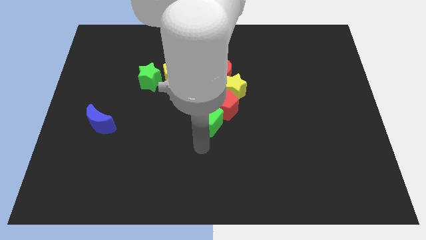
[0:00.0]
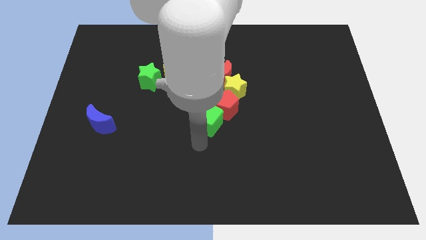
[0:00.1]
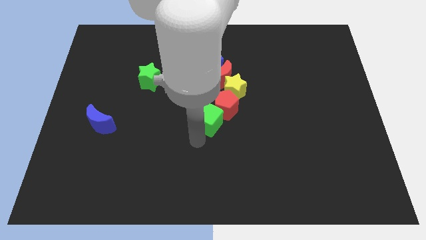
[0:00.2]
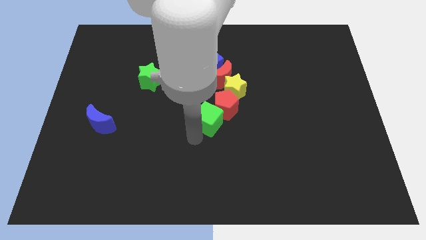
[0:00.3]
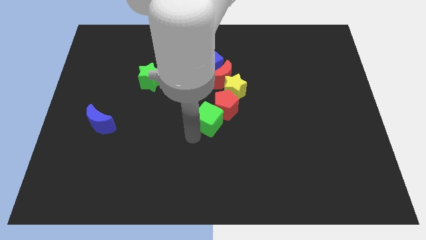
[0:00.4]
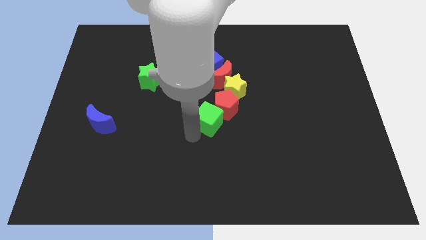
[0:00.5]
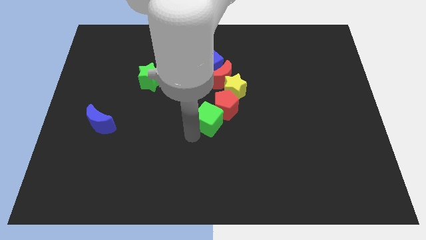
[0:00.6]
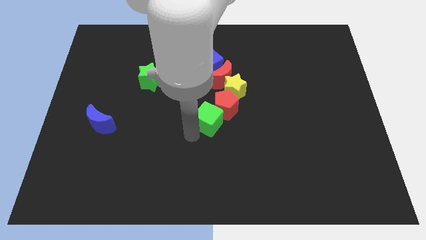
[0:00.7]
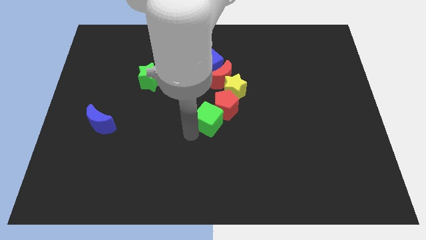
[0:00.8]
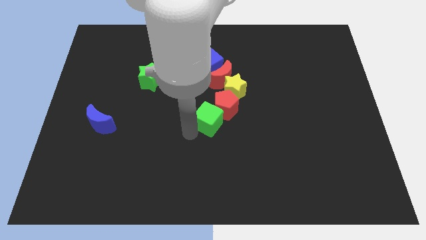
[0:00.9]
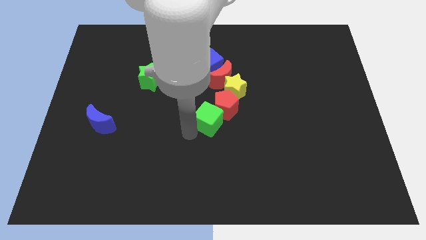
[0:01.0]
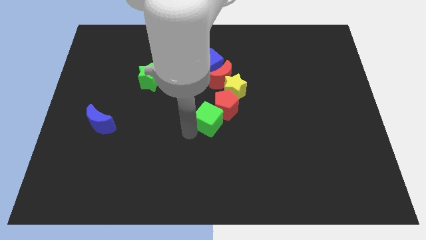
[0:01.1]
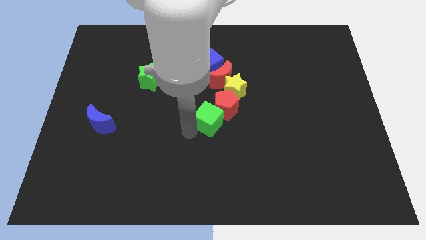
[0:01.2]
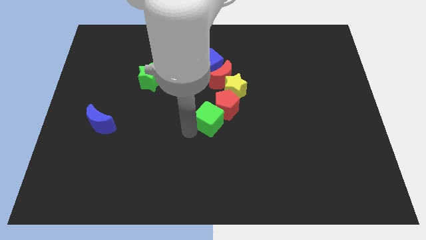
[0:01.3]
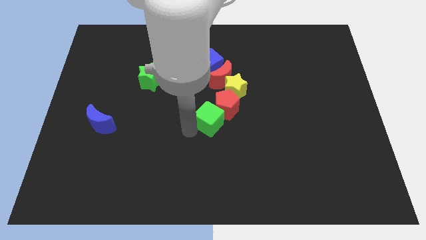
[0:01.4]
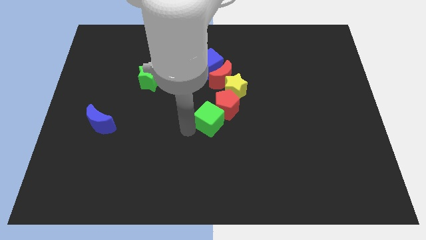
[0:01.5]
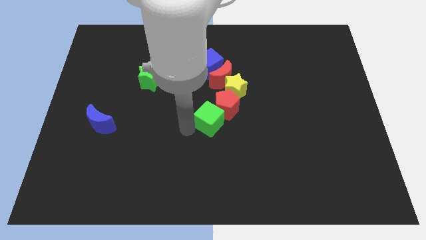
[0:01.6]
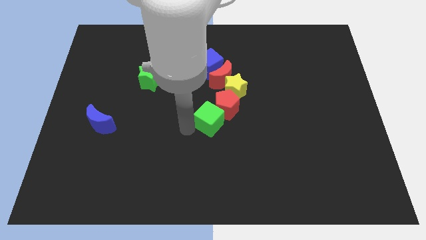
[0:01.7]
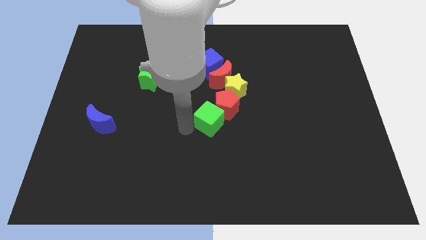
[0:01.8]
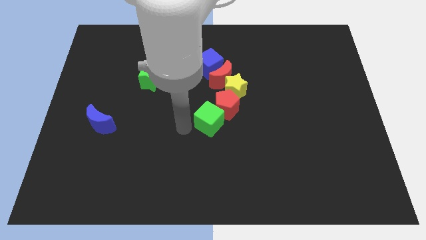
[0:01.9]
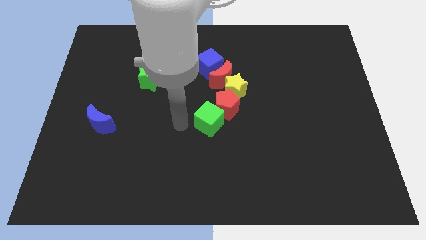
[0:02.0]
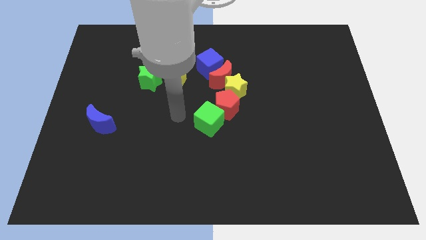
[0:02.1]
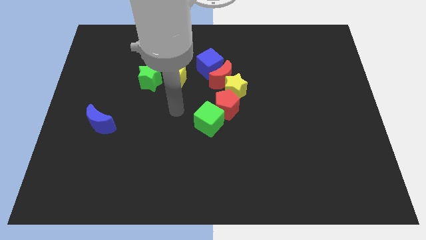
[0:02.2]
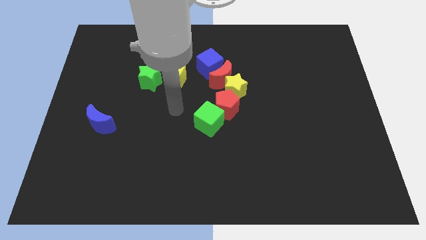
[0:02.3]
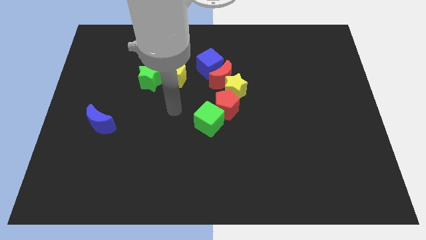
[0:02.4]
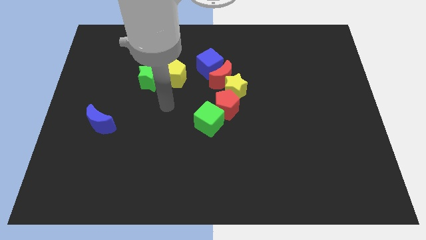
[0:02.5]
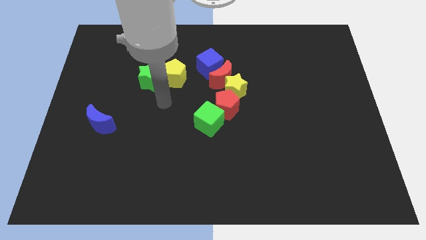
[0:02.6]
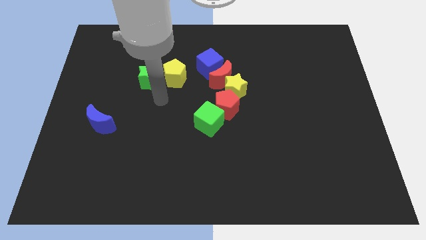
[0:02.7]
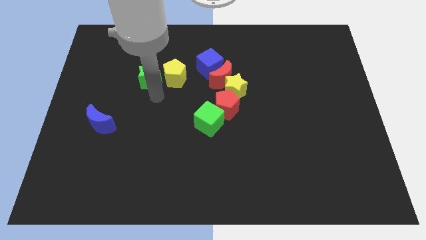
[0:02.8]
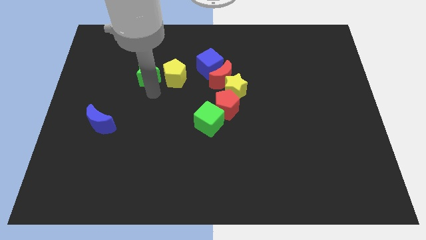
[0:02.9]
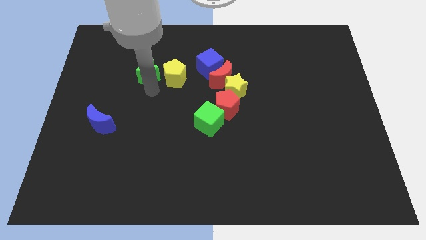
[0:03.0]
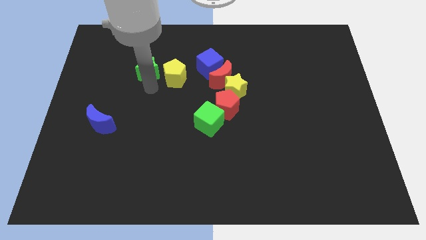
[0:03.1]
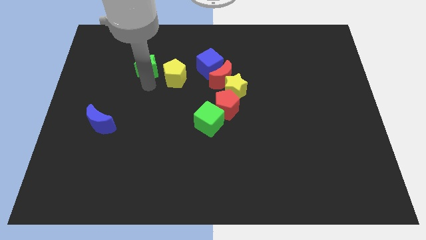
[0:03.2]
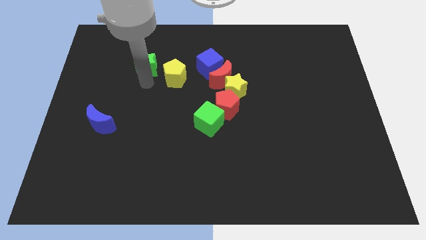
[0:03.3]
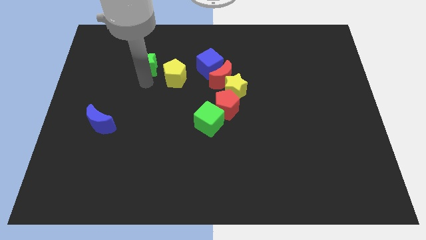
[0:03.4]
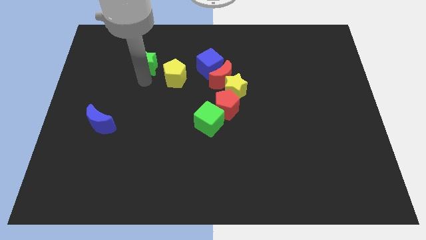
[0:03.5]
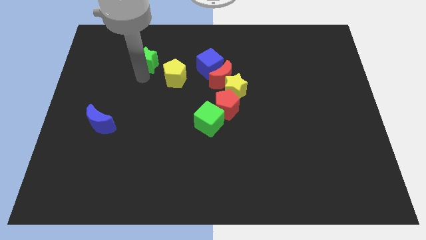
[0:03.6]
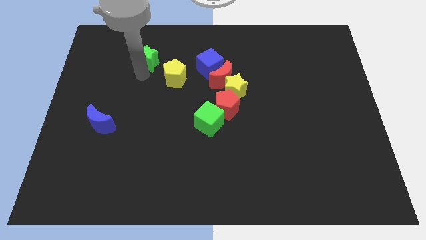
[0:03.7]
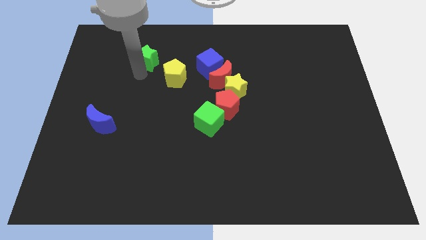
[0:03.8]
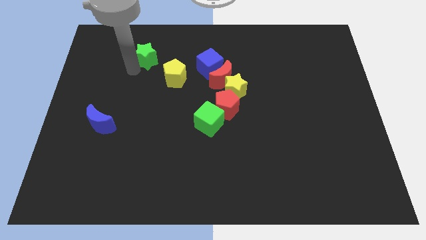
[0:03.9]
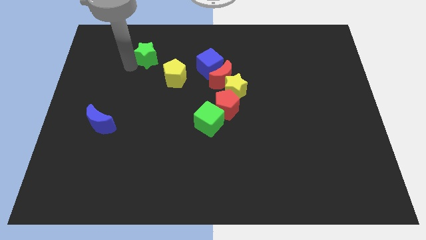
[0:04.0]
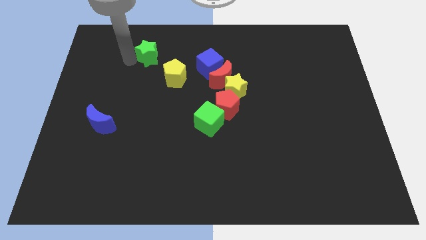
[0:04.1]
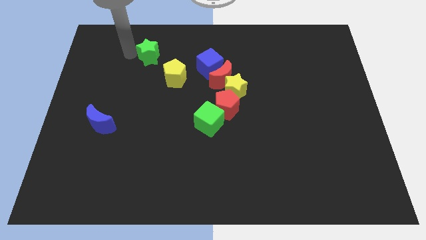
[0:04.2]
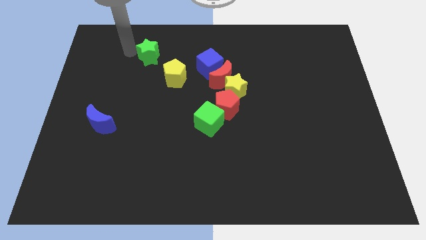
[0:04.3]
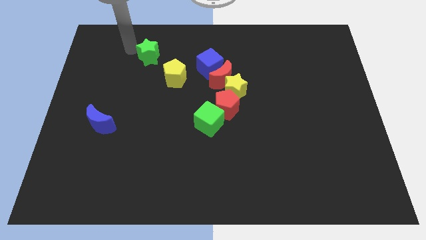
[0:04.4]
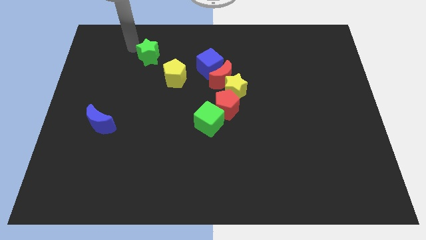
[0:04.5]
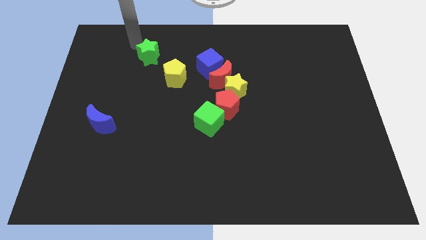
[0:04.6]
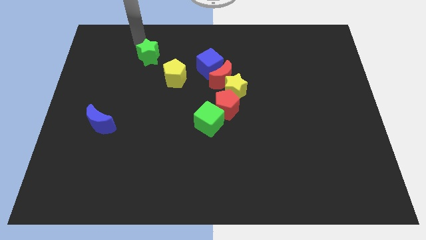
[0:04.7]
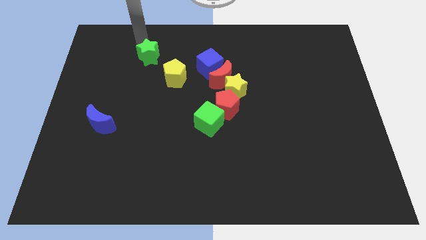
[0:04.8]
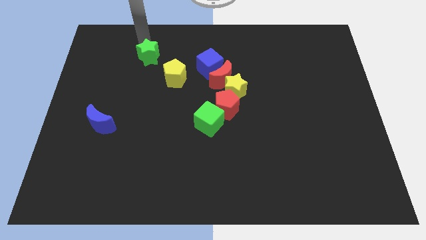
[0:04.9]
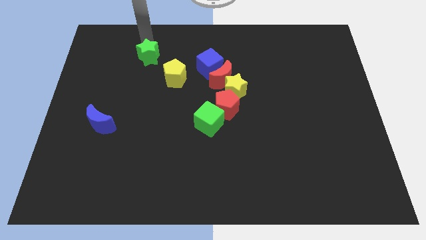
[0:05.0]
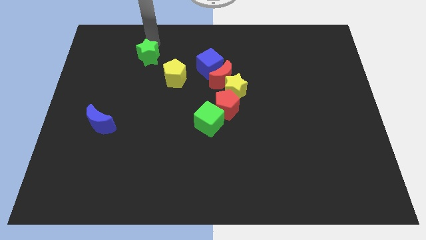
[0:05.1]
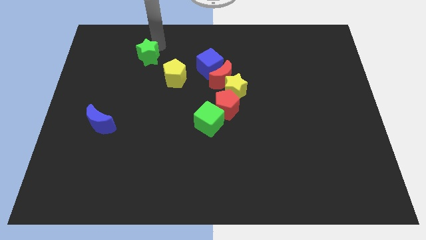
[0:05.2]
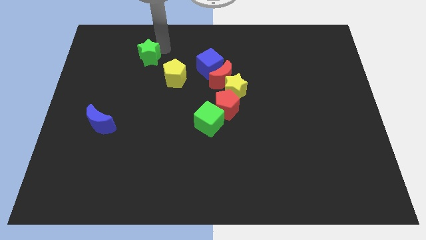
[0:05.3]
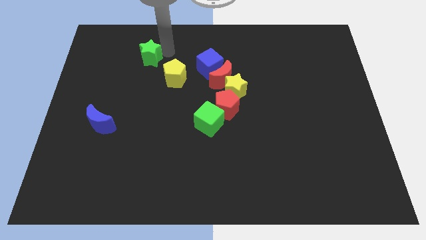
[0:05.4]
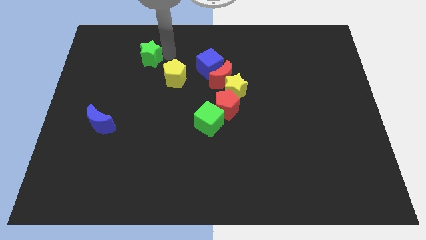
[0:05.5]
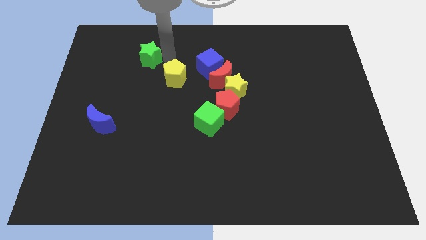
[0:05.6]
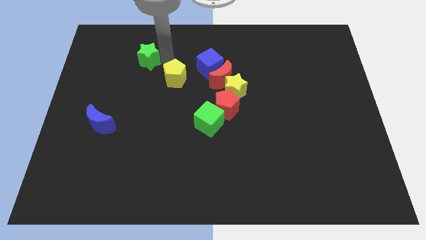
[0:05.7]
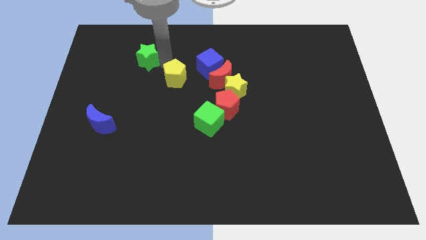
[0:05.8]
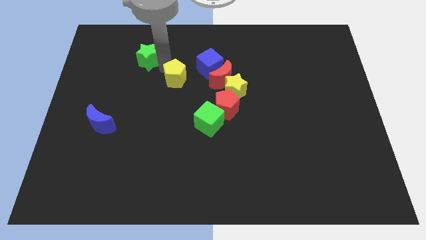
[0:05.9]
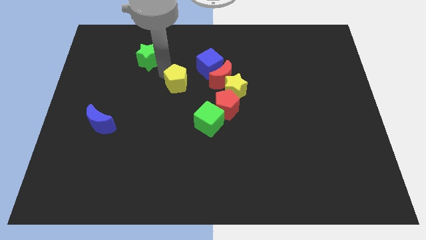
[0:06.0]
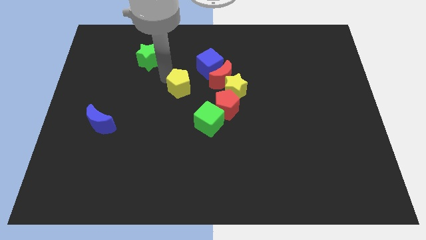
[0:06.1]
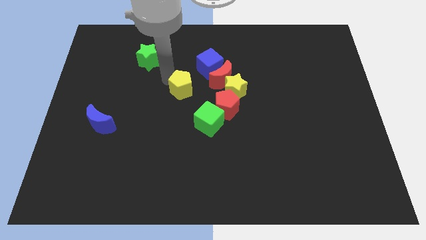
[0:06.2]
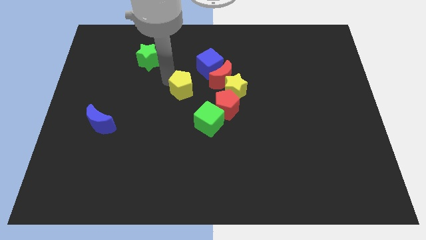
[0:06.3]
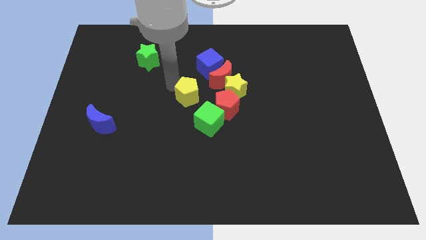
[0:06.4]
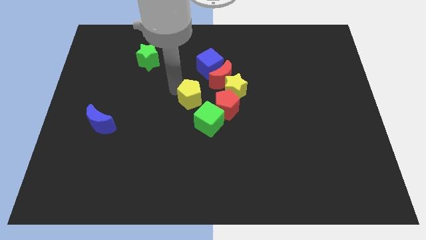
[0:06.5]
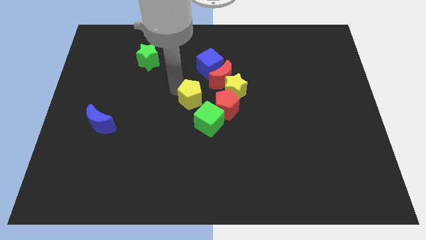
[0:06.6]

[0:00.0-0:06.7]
separate the green star and yellow pentagon

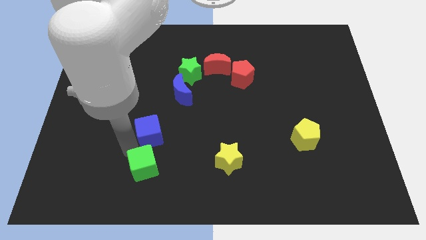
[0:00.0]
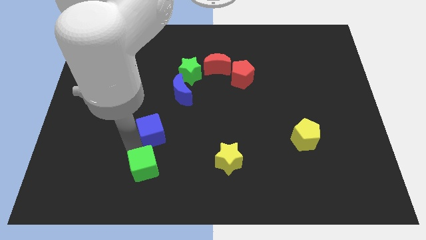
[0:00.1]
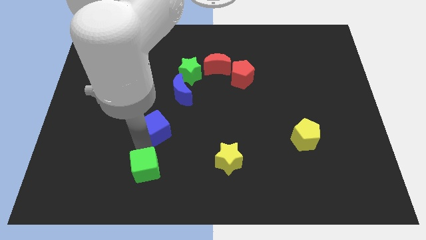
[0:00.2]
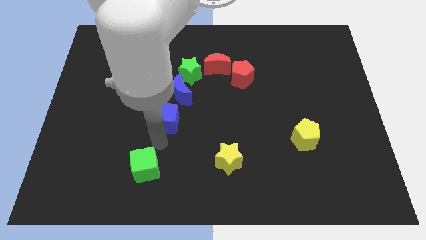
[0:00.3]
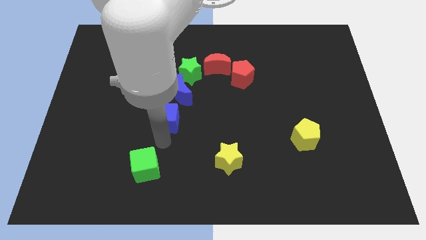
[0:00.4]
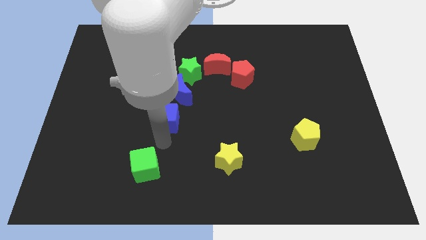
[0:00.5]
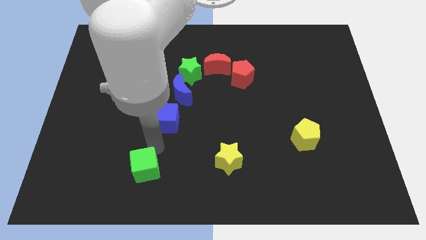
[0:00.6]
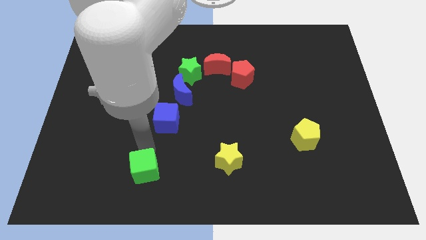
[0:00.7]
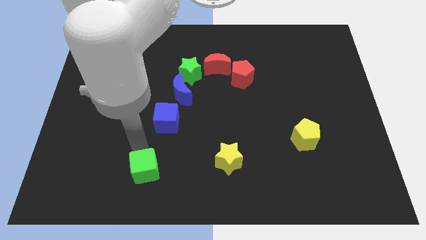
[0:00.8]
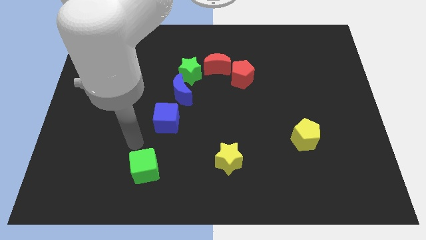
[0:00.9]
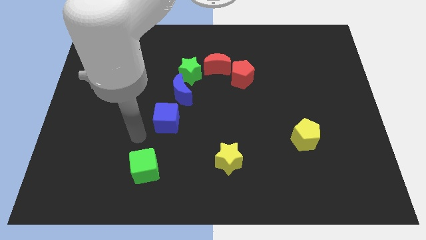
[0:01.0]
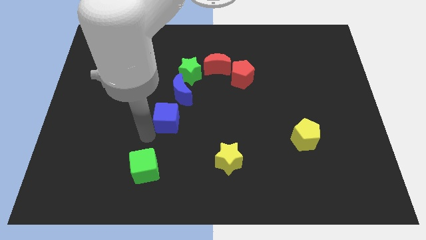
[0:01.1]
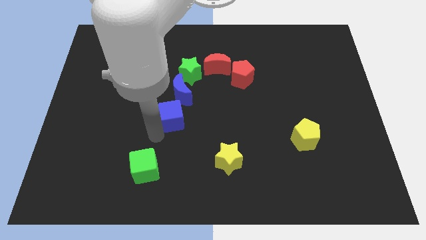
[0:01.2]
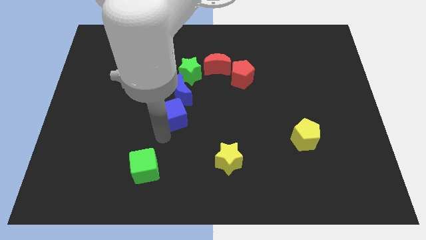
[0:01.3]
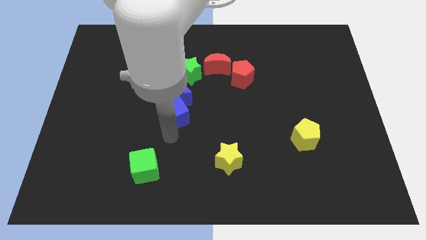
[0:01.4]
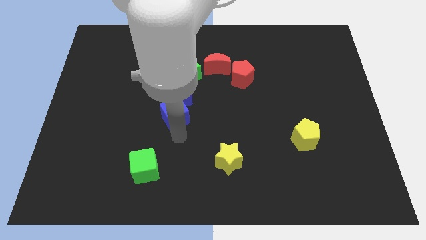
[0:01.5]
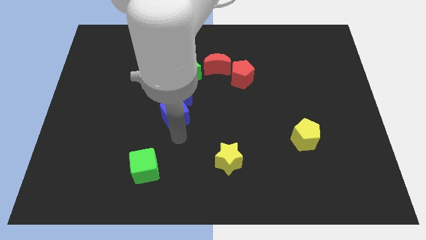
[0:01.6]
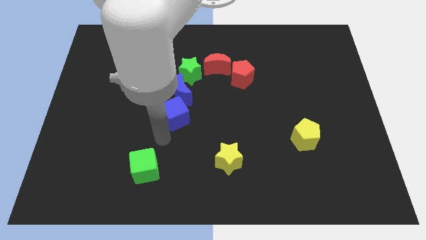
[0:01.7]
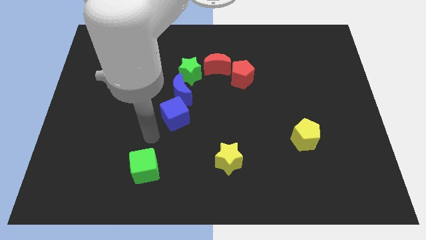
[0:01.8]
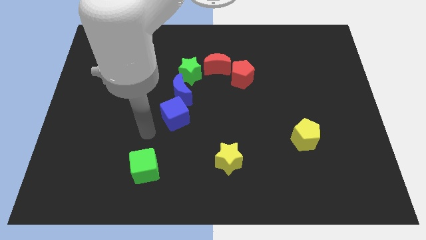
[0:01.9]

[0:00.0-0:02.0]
place blue cube at the bottom of blue moon

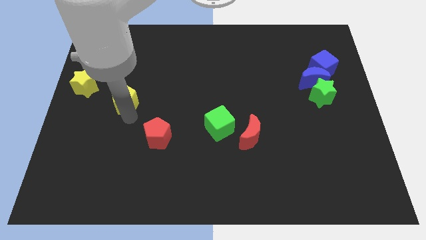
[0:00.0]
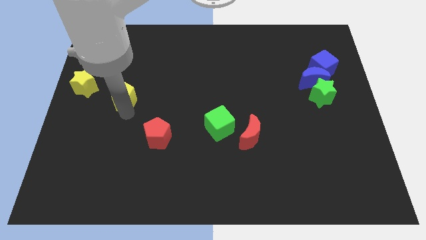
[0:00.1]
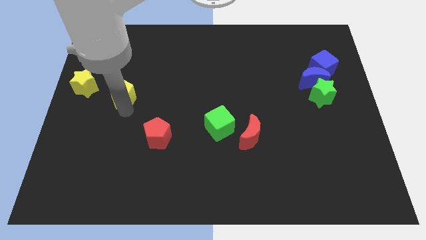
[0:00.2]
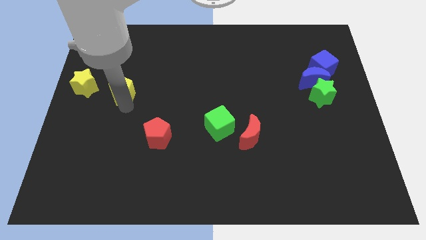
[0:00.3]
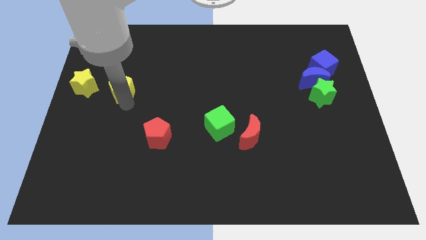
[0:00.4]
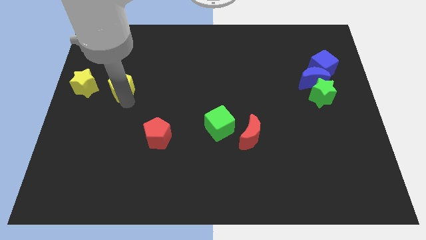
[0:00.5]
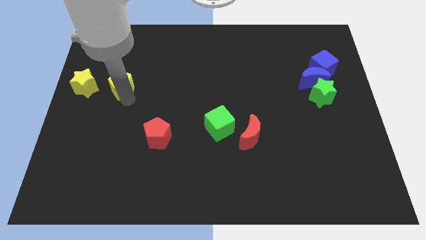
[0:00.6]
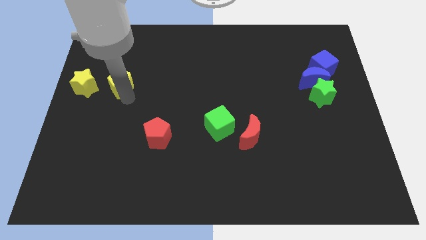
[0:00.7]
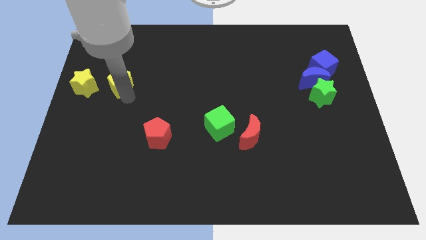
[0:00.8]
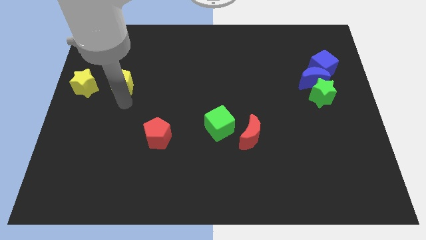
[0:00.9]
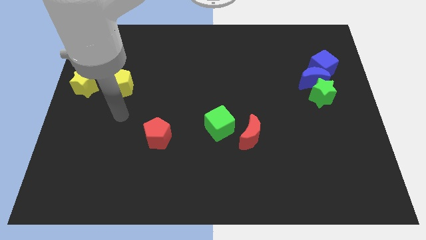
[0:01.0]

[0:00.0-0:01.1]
move the yellow pentagon to the right of the yellow star
